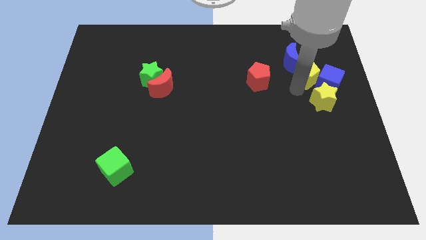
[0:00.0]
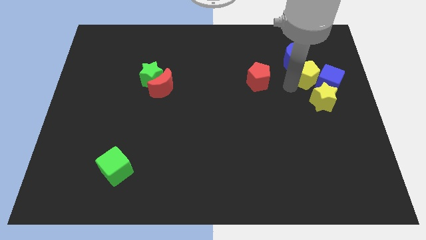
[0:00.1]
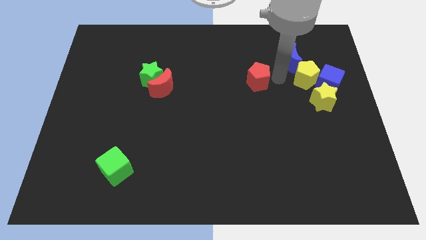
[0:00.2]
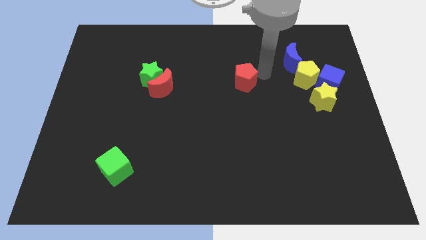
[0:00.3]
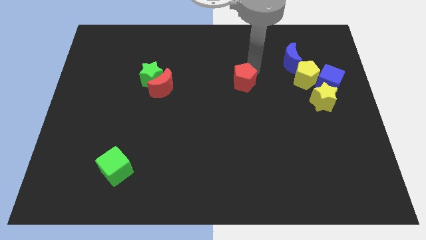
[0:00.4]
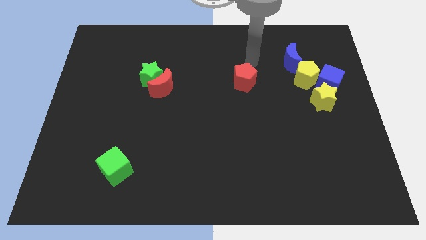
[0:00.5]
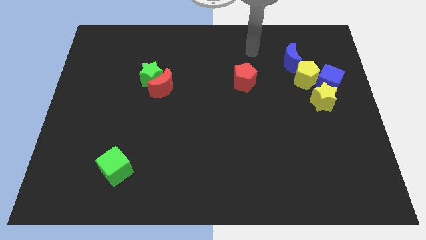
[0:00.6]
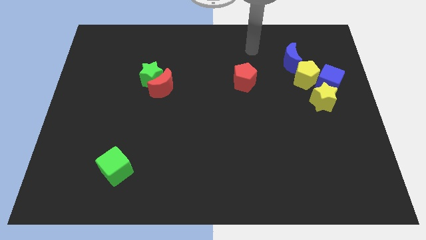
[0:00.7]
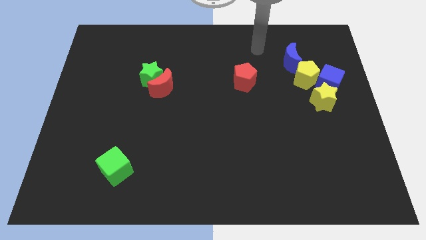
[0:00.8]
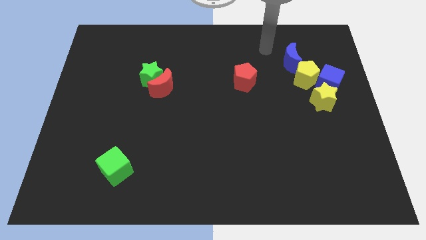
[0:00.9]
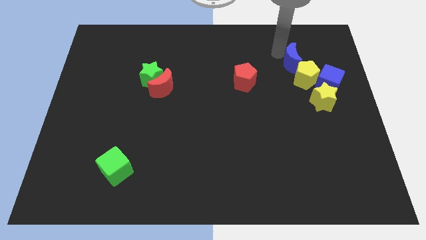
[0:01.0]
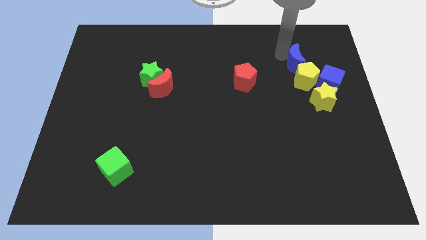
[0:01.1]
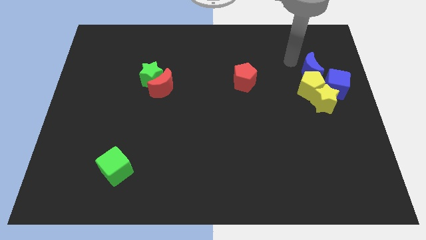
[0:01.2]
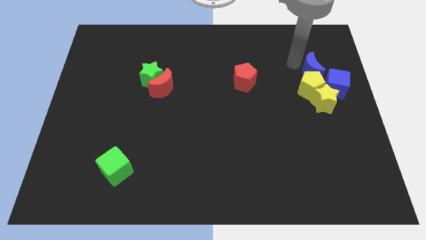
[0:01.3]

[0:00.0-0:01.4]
place the blue crescent above the yellow pentagon

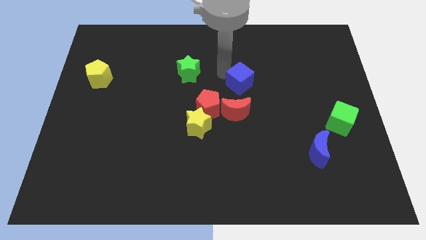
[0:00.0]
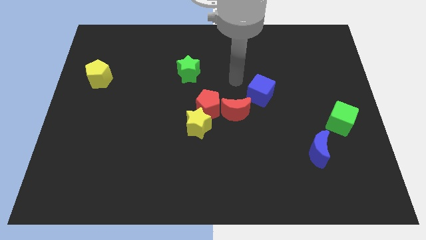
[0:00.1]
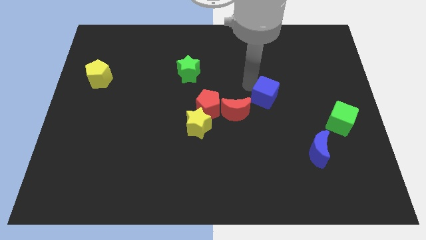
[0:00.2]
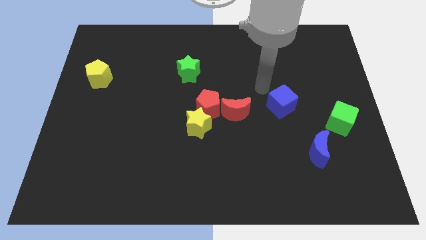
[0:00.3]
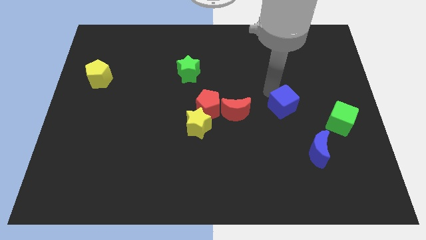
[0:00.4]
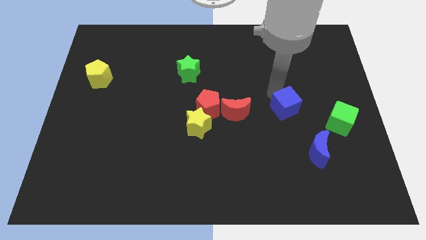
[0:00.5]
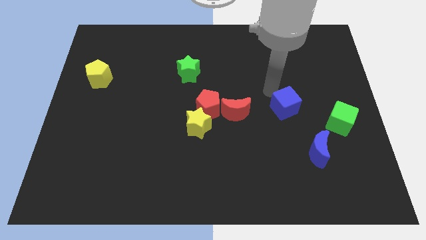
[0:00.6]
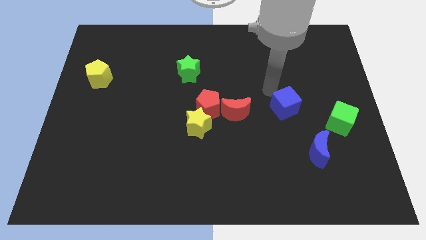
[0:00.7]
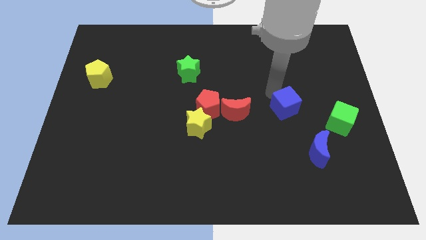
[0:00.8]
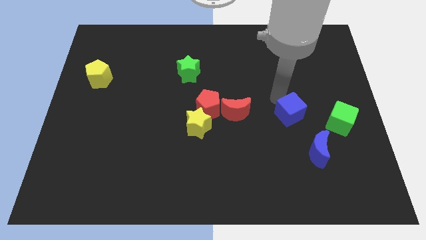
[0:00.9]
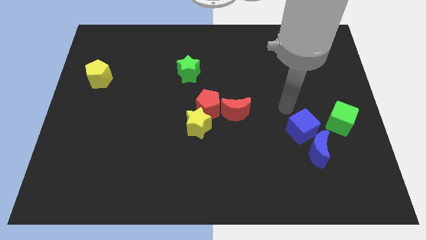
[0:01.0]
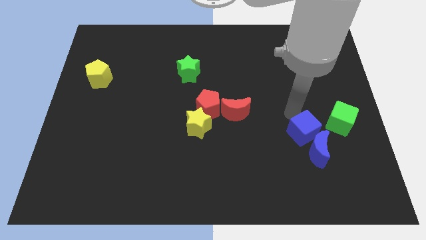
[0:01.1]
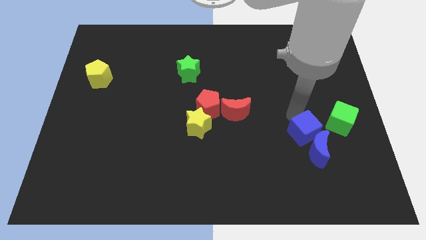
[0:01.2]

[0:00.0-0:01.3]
place the blue cube to the left side of green cube

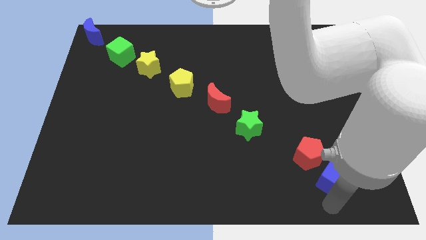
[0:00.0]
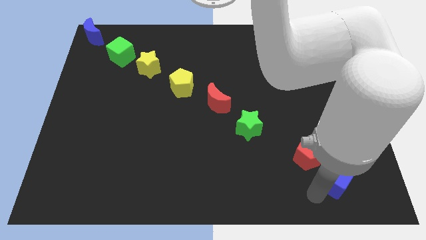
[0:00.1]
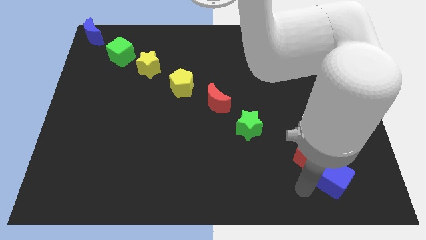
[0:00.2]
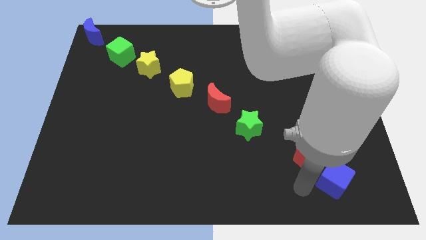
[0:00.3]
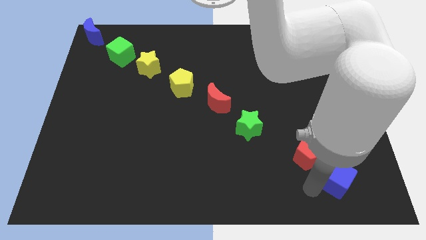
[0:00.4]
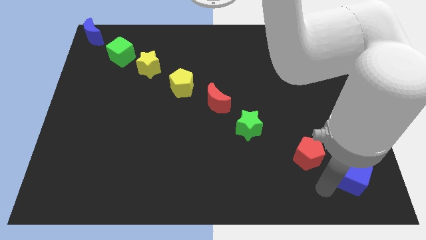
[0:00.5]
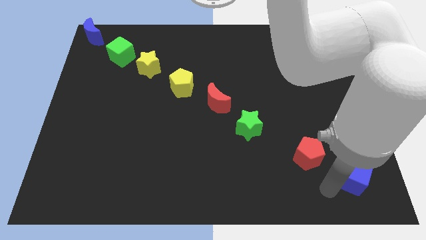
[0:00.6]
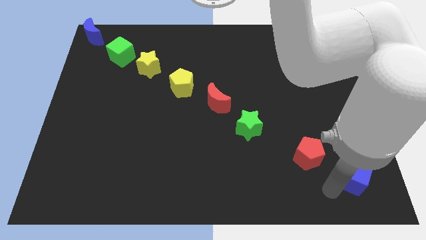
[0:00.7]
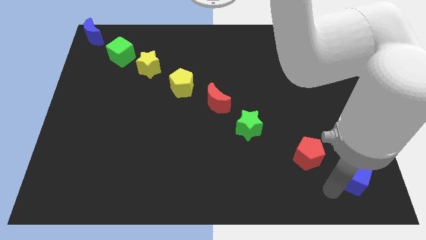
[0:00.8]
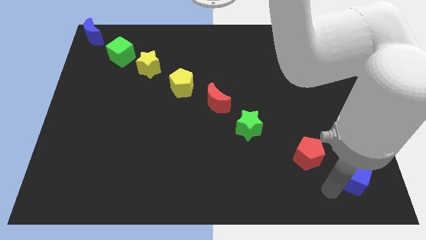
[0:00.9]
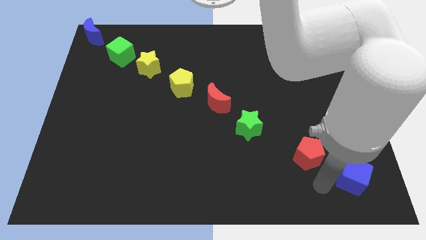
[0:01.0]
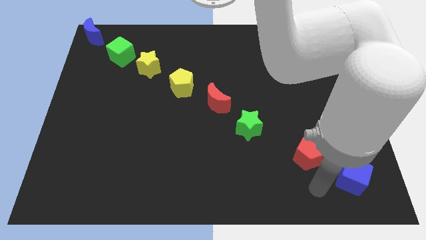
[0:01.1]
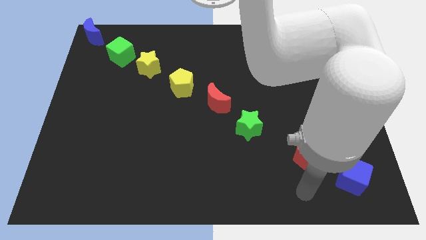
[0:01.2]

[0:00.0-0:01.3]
push the blue cube to the bottom right of the board

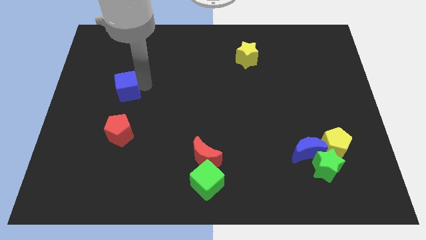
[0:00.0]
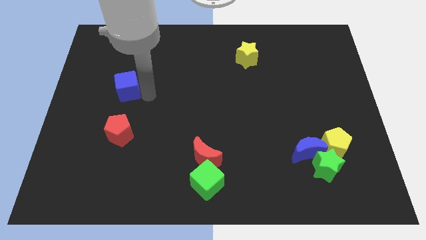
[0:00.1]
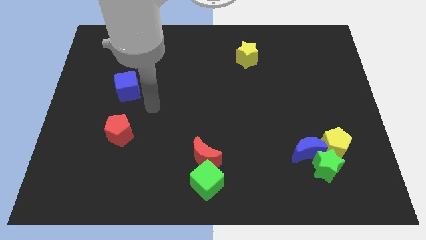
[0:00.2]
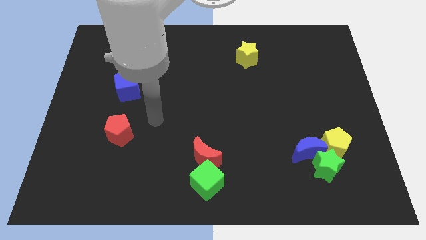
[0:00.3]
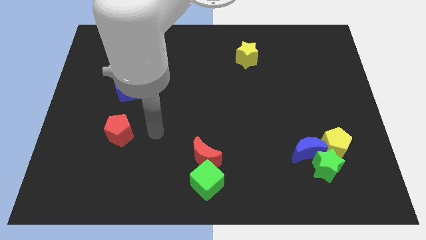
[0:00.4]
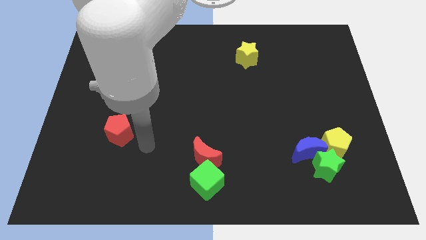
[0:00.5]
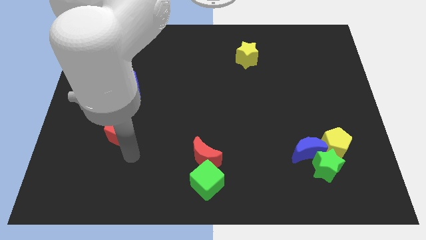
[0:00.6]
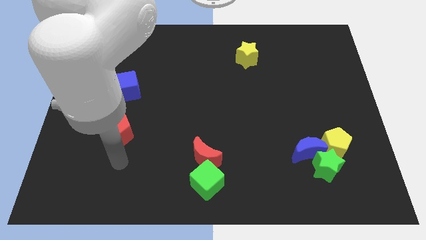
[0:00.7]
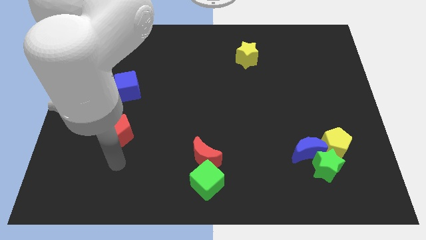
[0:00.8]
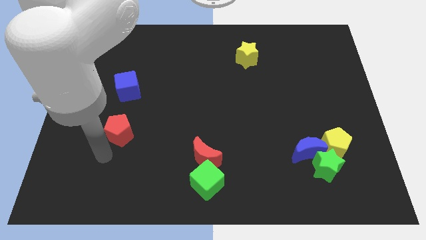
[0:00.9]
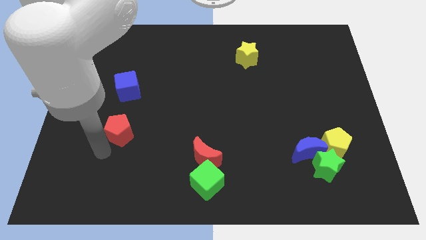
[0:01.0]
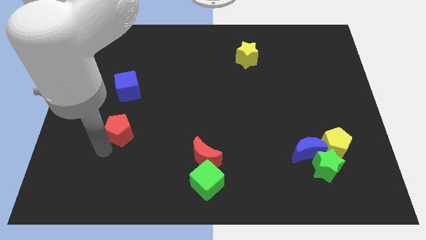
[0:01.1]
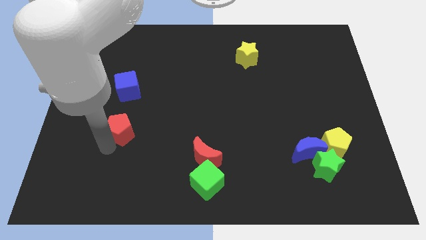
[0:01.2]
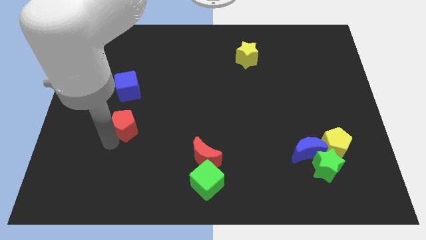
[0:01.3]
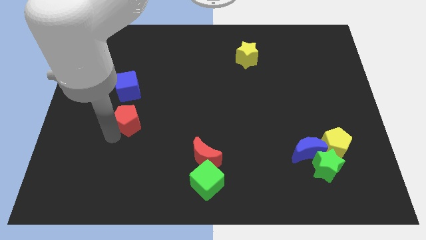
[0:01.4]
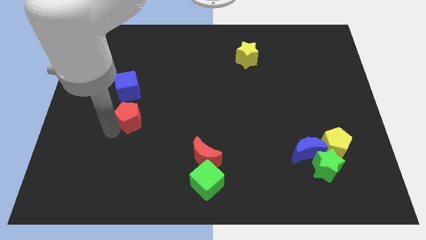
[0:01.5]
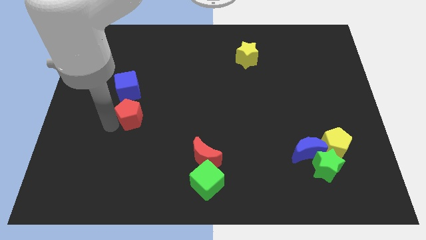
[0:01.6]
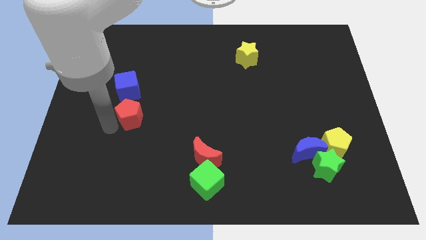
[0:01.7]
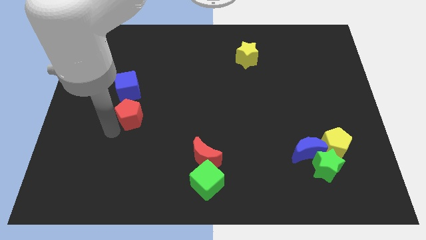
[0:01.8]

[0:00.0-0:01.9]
slide the red pentagon close to the blue cube

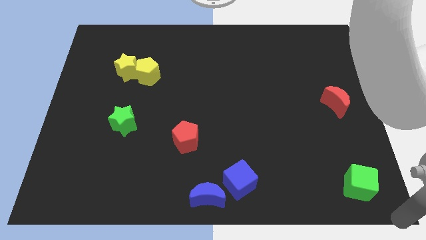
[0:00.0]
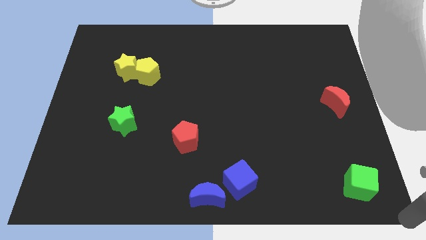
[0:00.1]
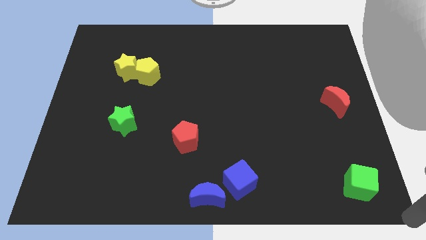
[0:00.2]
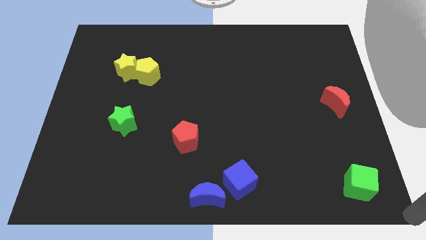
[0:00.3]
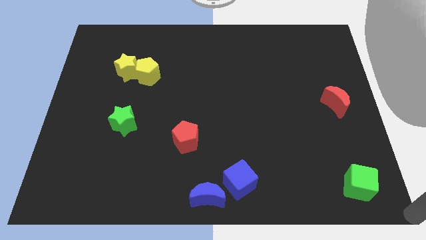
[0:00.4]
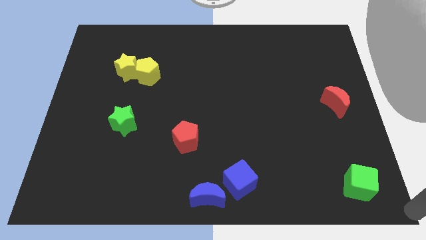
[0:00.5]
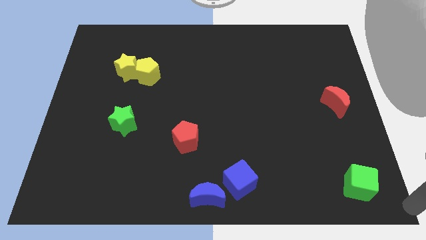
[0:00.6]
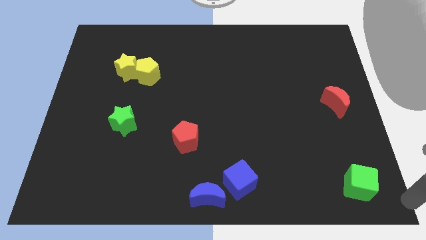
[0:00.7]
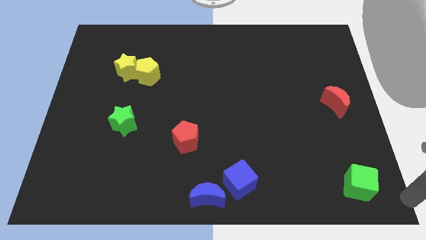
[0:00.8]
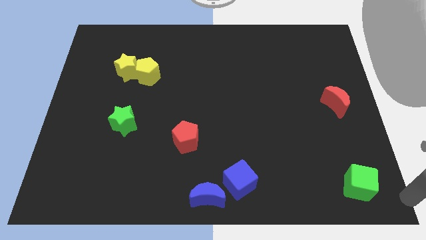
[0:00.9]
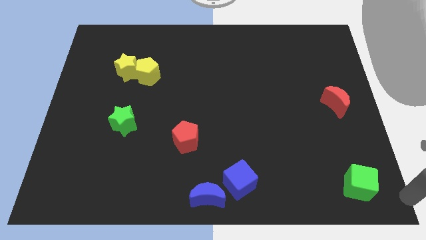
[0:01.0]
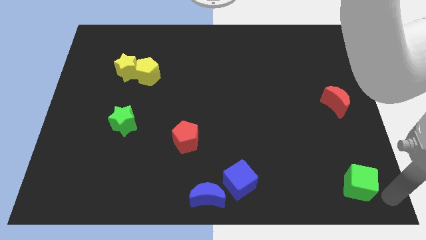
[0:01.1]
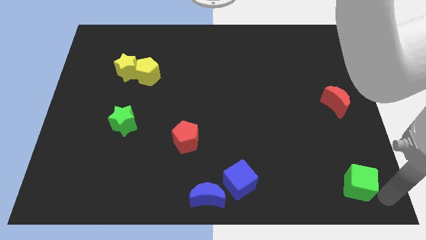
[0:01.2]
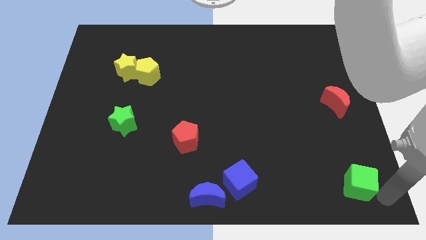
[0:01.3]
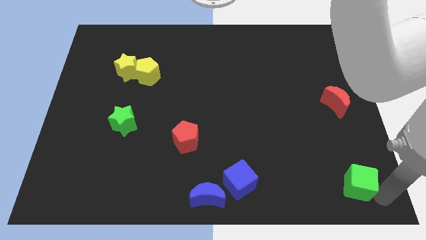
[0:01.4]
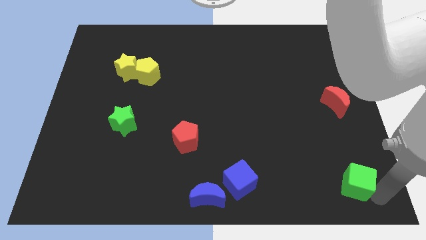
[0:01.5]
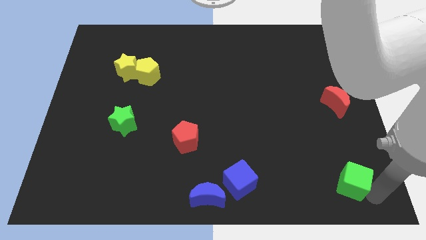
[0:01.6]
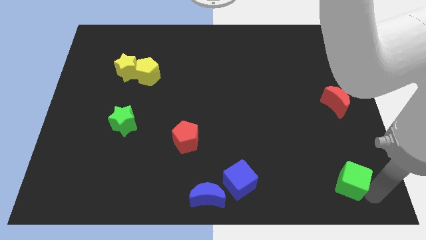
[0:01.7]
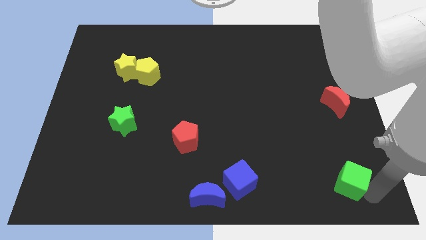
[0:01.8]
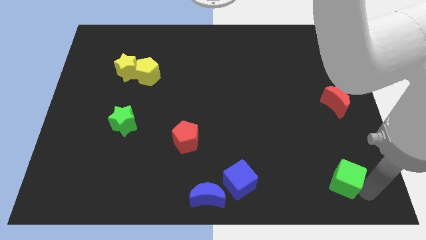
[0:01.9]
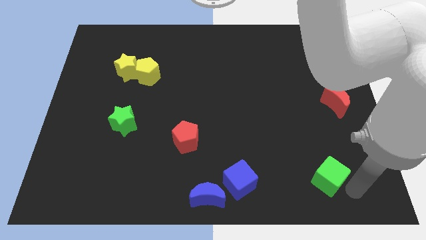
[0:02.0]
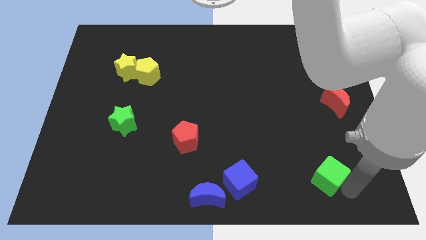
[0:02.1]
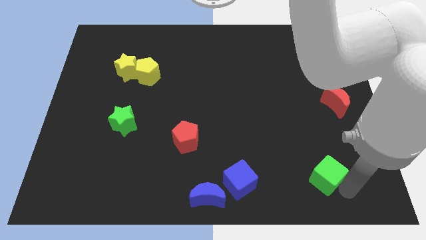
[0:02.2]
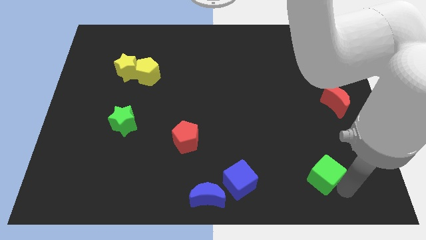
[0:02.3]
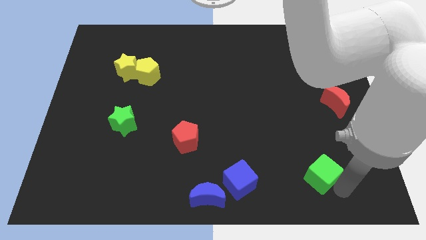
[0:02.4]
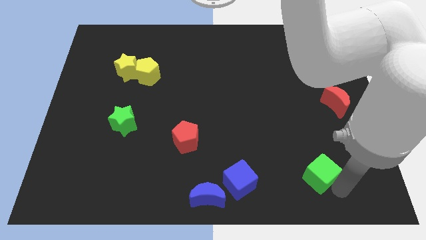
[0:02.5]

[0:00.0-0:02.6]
move the green cube to the bottom of the red crescent

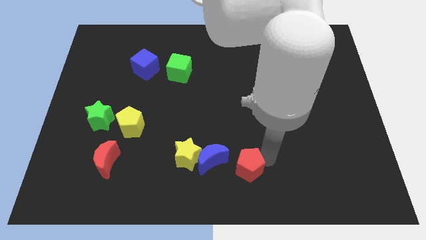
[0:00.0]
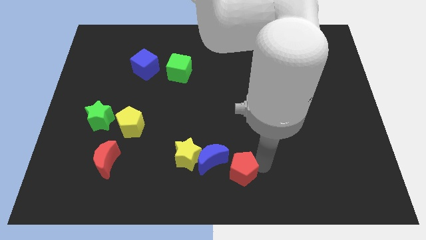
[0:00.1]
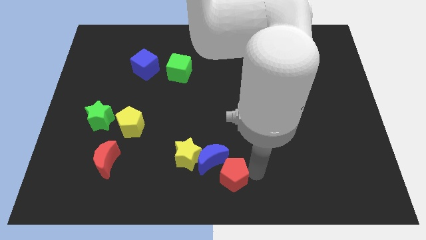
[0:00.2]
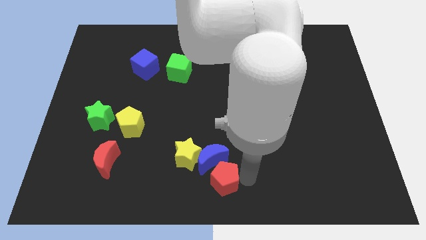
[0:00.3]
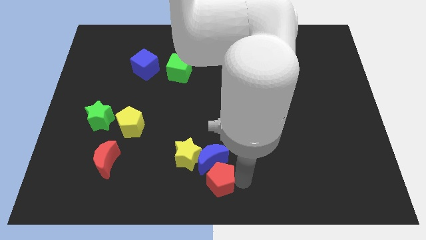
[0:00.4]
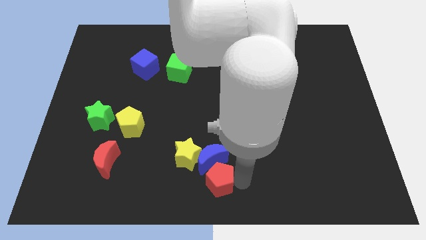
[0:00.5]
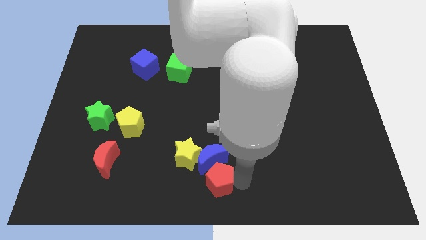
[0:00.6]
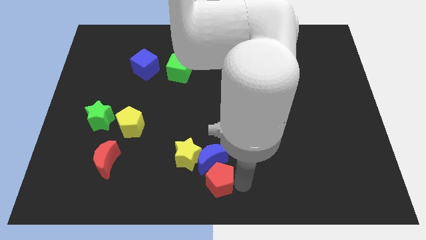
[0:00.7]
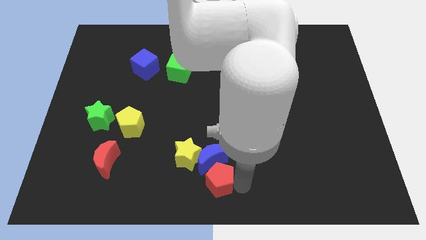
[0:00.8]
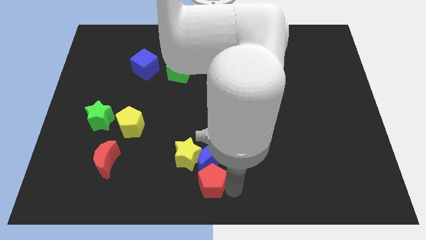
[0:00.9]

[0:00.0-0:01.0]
place the red pentagon to the bottom of the blue crescent
